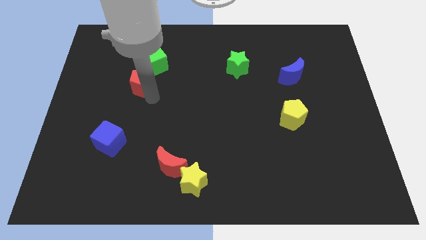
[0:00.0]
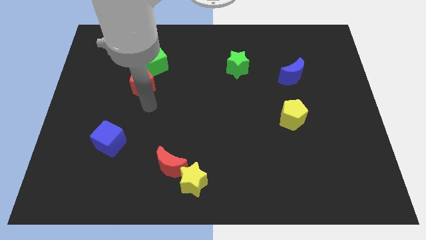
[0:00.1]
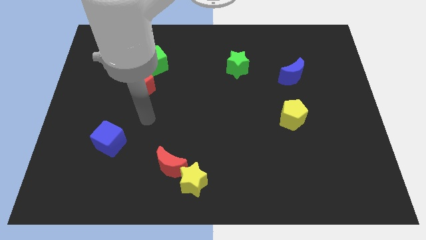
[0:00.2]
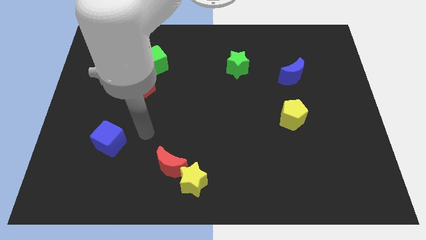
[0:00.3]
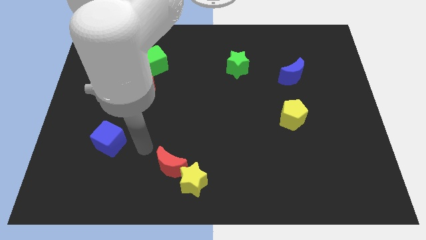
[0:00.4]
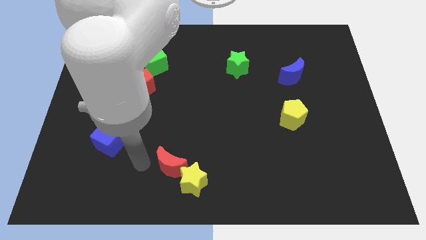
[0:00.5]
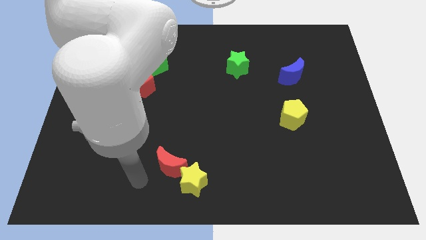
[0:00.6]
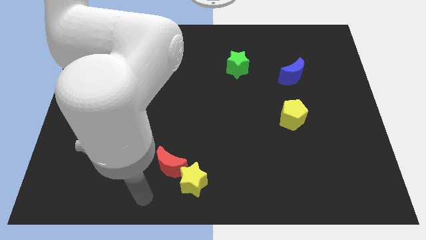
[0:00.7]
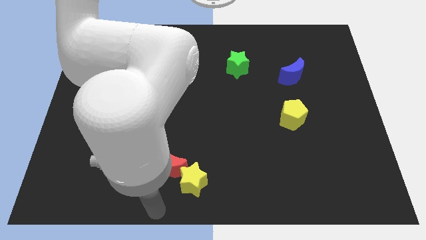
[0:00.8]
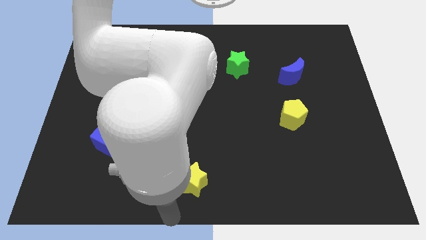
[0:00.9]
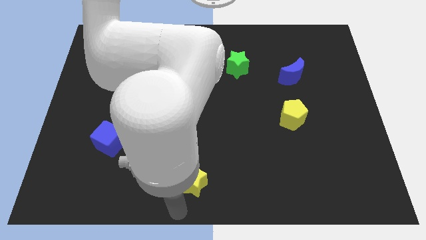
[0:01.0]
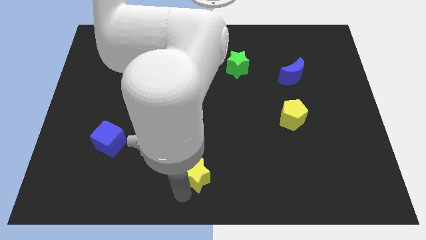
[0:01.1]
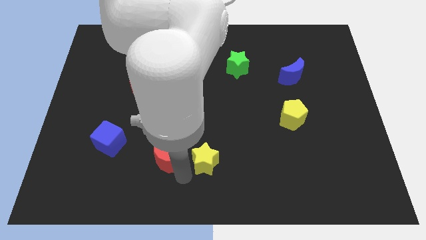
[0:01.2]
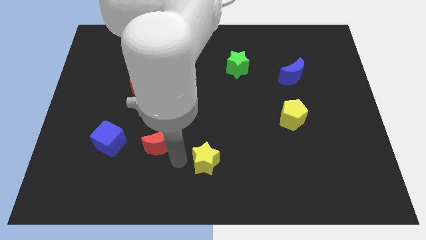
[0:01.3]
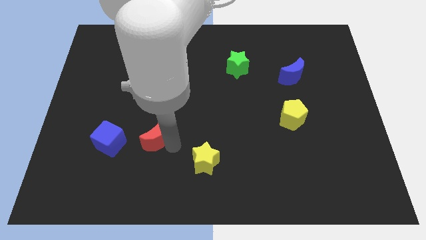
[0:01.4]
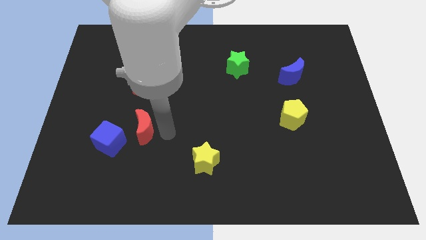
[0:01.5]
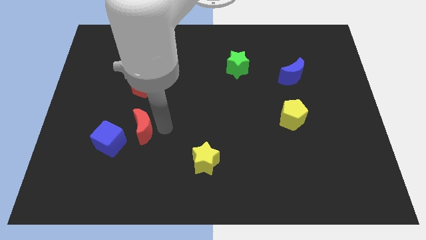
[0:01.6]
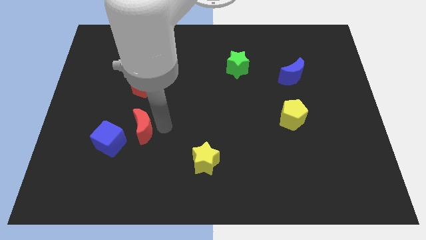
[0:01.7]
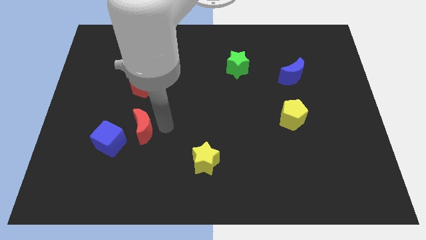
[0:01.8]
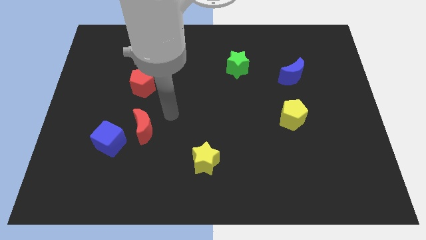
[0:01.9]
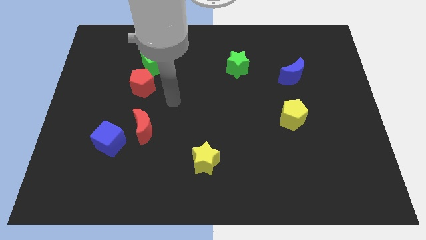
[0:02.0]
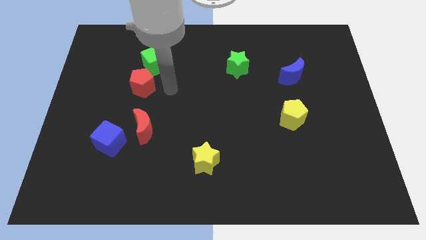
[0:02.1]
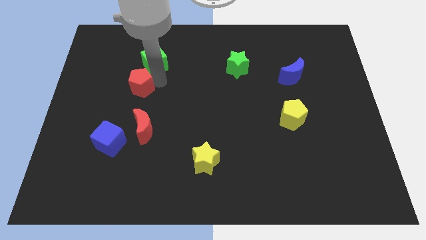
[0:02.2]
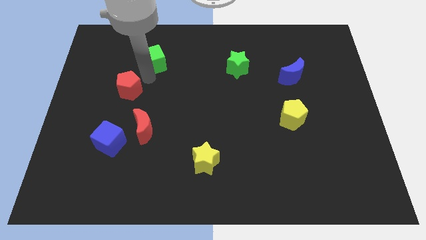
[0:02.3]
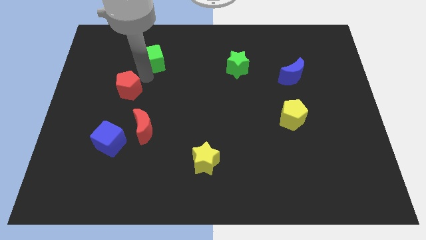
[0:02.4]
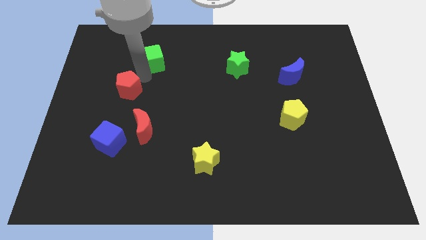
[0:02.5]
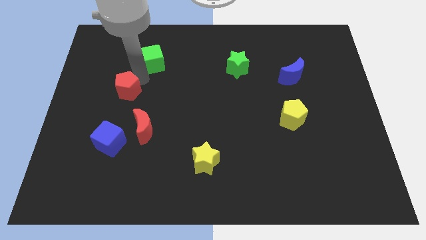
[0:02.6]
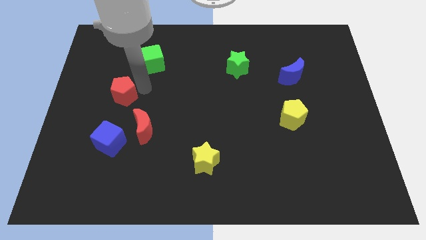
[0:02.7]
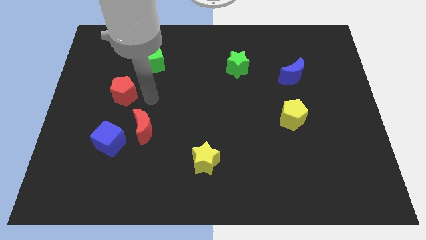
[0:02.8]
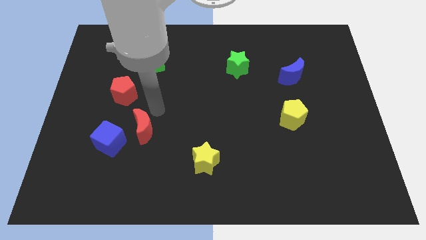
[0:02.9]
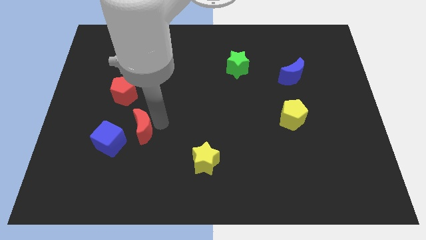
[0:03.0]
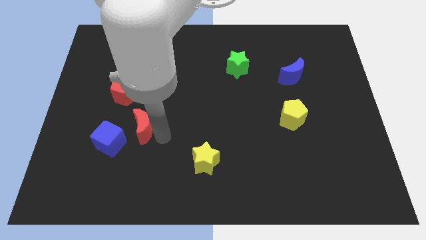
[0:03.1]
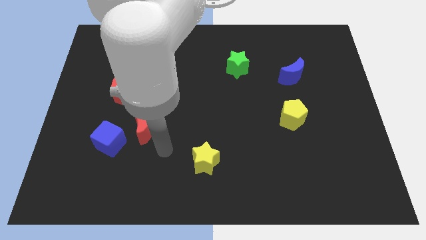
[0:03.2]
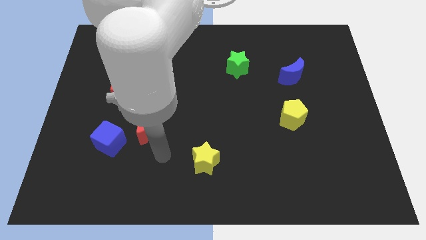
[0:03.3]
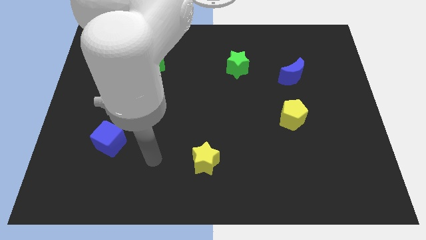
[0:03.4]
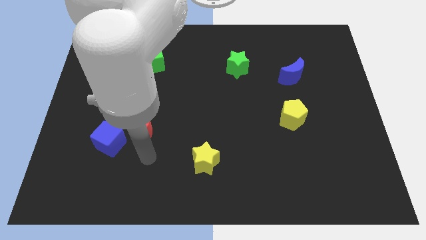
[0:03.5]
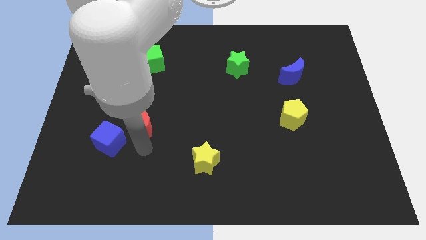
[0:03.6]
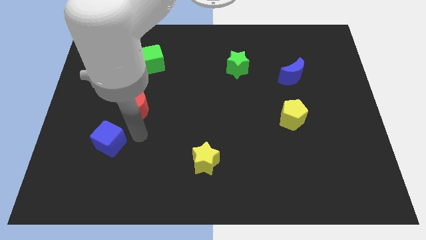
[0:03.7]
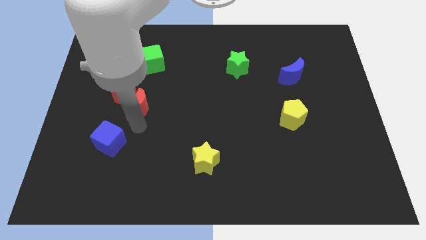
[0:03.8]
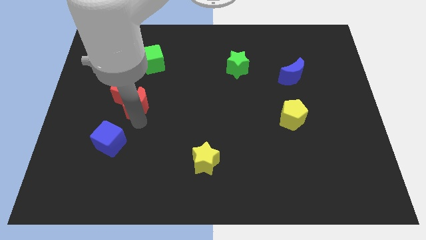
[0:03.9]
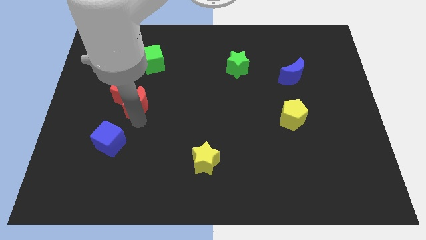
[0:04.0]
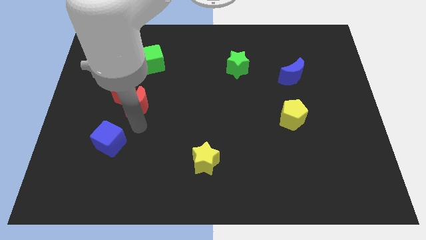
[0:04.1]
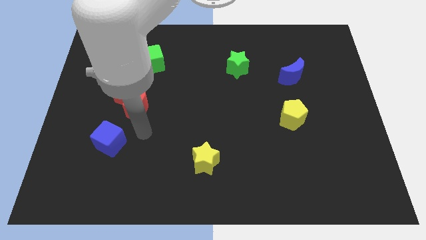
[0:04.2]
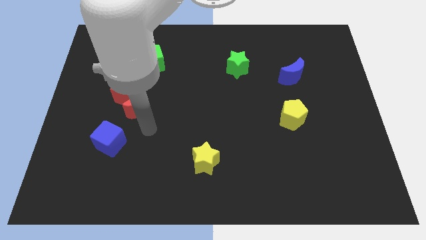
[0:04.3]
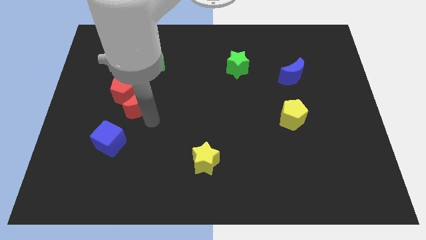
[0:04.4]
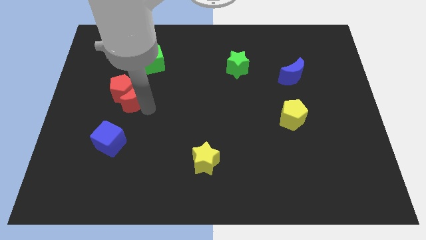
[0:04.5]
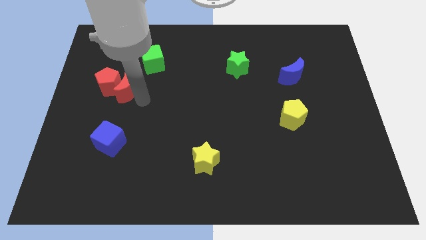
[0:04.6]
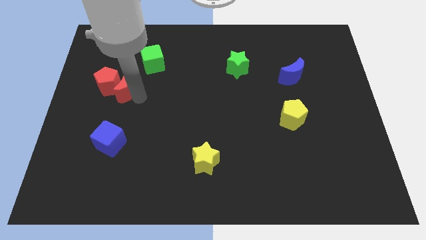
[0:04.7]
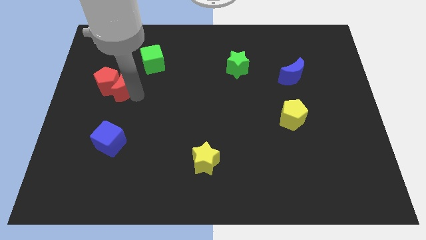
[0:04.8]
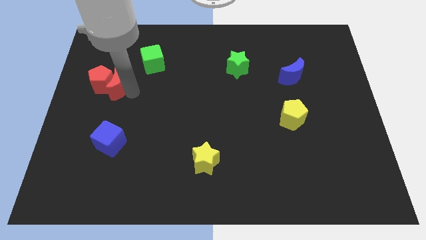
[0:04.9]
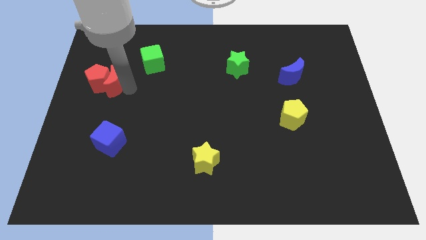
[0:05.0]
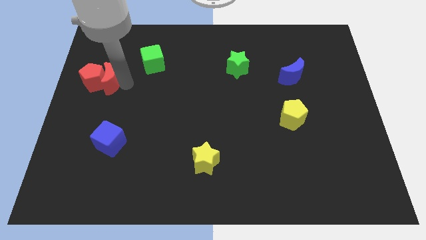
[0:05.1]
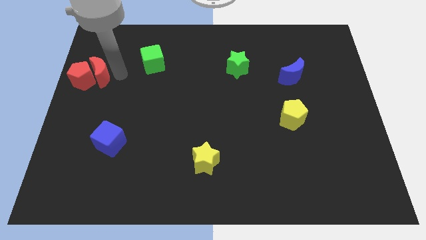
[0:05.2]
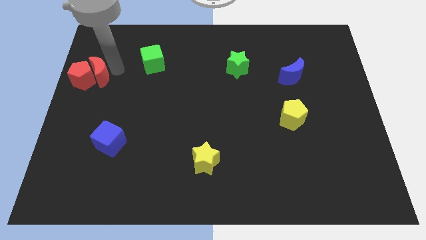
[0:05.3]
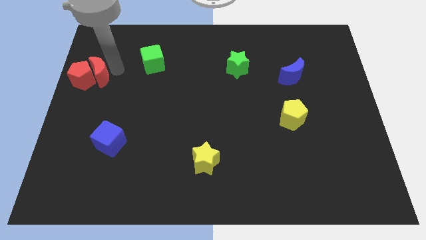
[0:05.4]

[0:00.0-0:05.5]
move the red pentagon and the red crescent to the left of the green cube

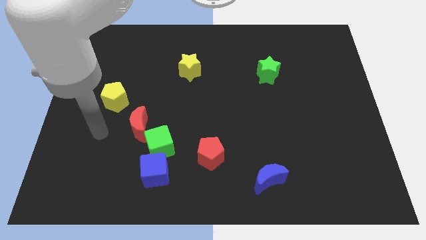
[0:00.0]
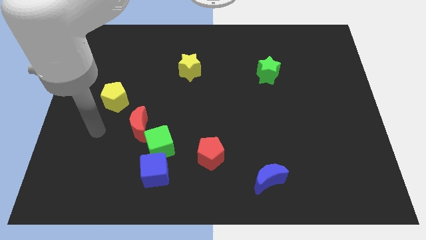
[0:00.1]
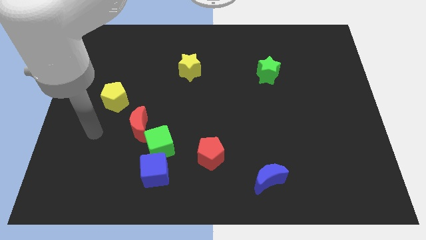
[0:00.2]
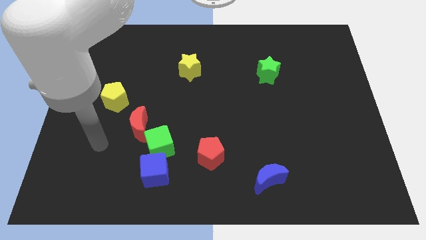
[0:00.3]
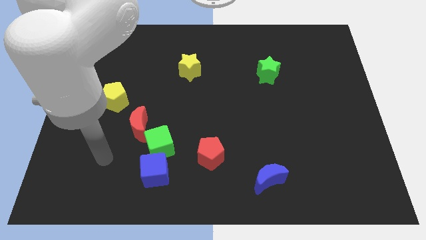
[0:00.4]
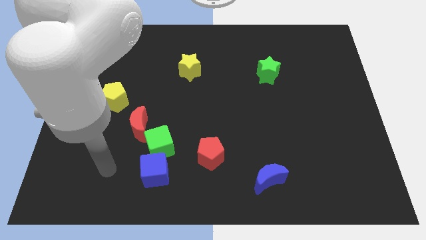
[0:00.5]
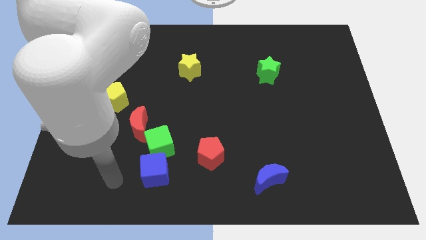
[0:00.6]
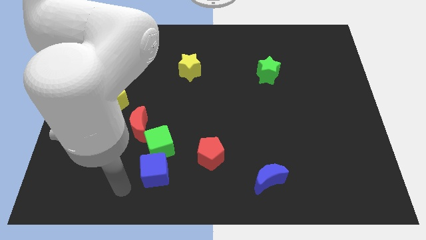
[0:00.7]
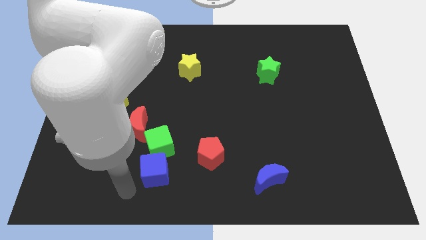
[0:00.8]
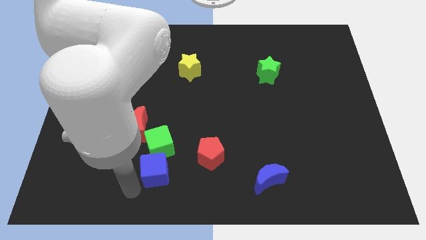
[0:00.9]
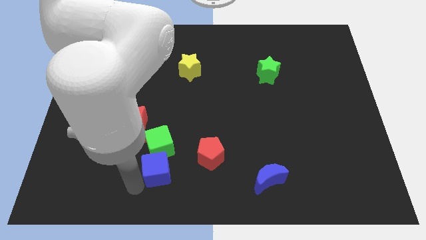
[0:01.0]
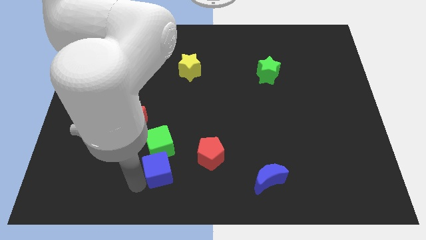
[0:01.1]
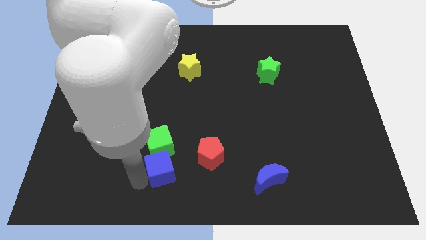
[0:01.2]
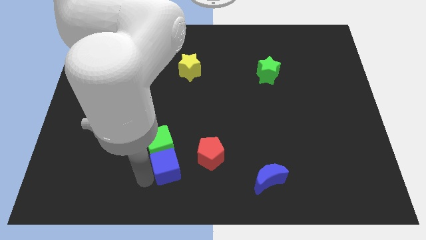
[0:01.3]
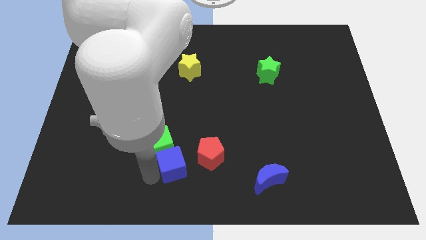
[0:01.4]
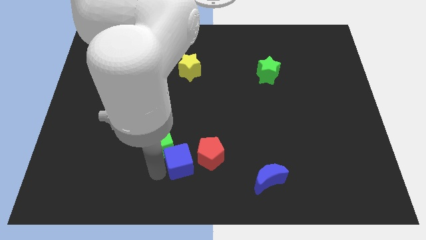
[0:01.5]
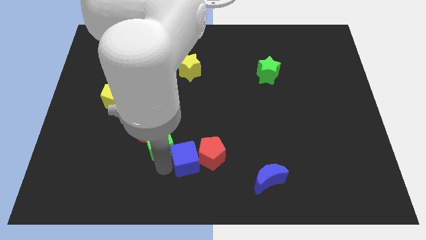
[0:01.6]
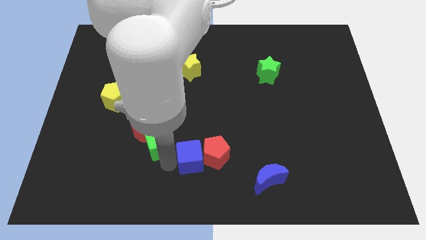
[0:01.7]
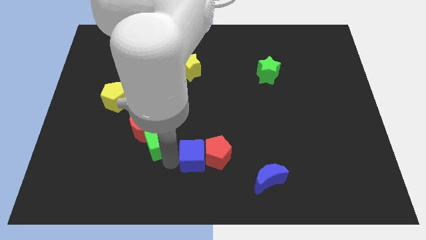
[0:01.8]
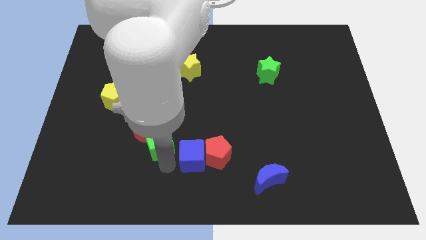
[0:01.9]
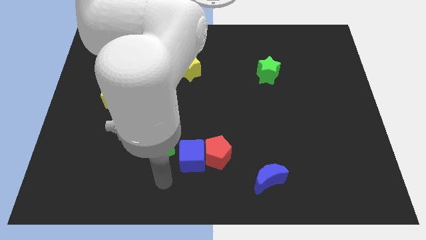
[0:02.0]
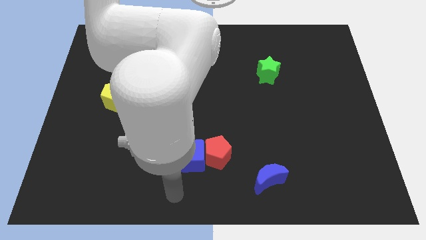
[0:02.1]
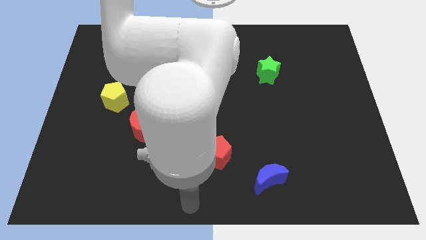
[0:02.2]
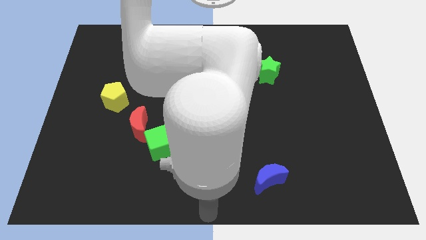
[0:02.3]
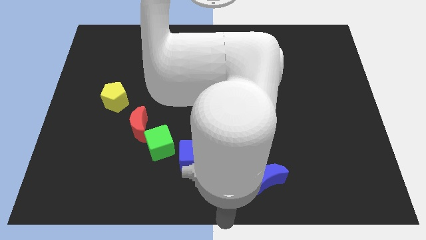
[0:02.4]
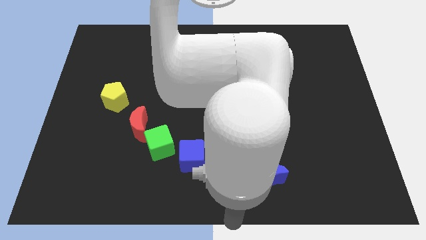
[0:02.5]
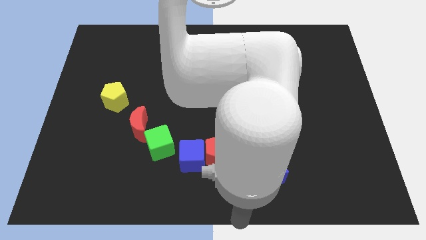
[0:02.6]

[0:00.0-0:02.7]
move the blue cube to the left of the red pentagon

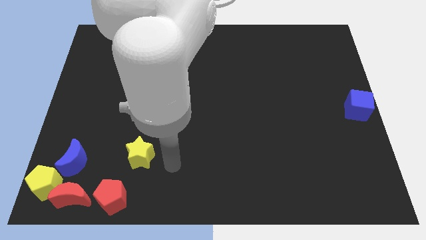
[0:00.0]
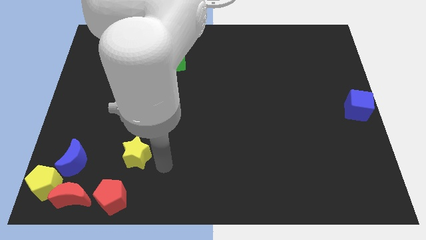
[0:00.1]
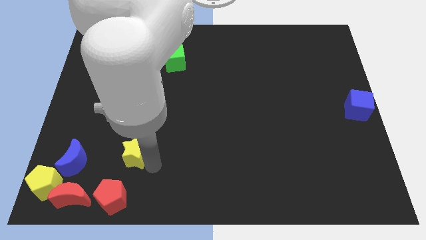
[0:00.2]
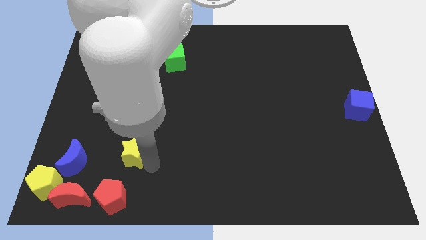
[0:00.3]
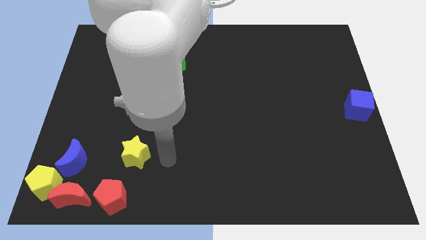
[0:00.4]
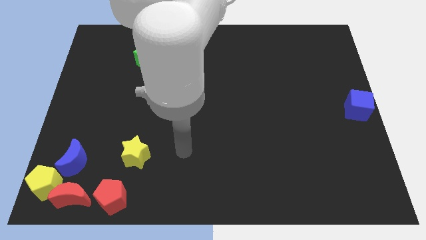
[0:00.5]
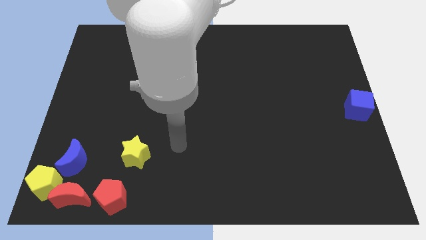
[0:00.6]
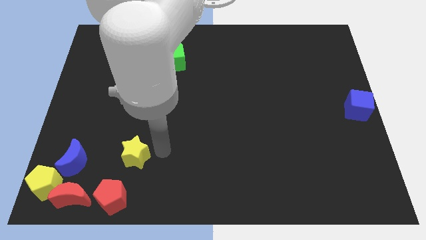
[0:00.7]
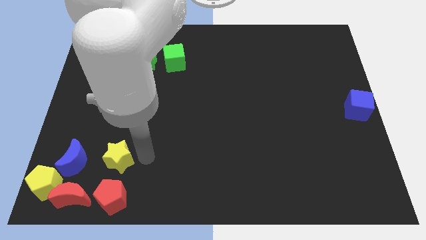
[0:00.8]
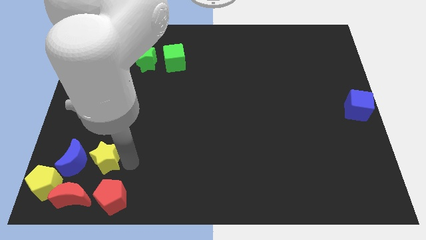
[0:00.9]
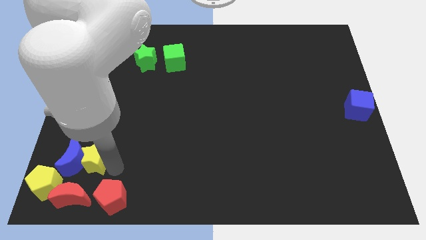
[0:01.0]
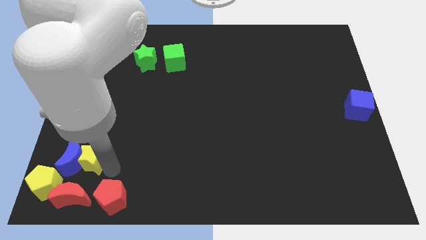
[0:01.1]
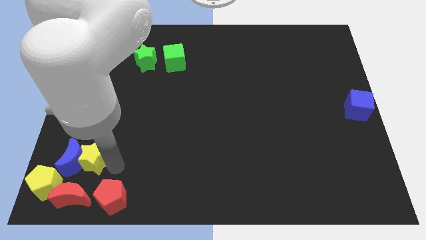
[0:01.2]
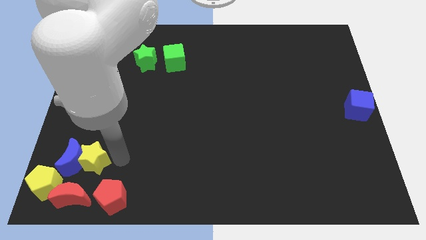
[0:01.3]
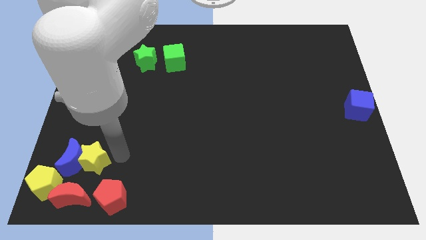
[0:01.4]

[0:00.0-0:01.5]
push the yellow star into the blue crescent
